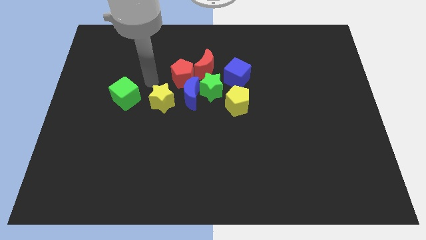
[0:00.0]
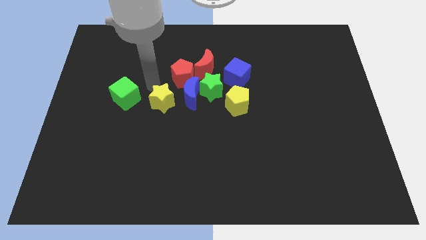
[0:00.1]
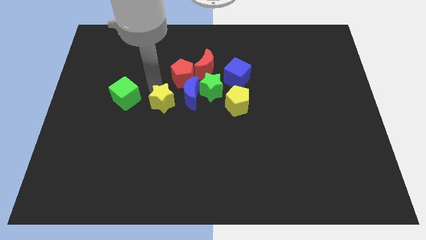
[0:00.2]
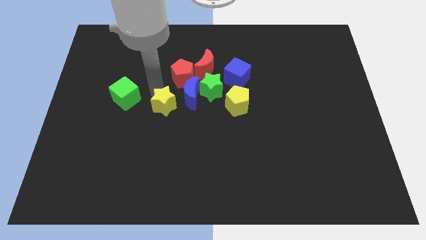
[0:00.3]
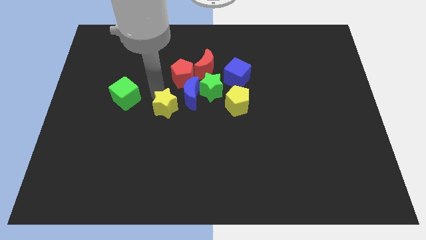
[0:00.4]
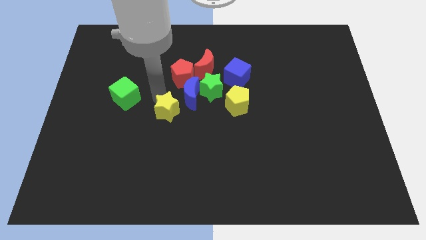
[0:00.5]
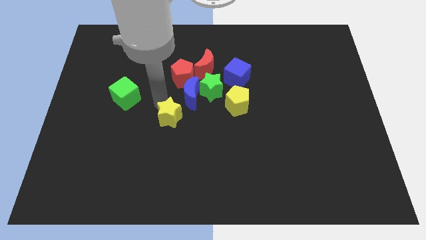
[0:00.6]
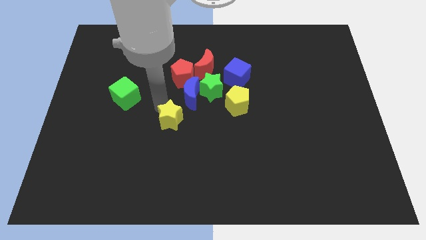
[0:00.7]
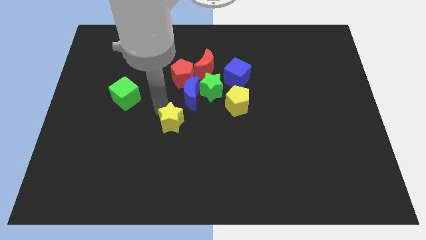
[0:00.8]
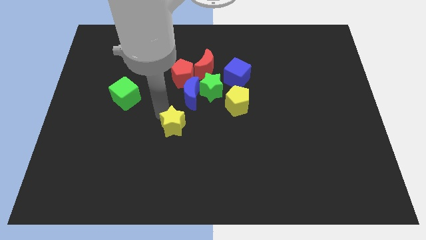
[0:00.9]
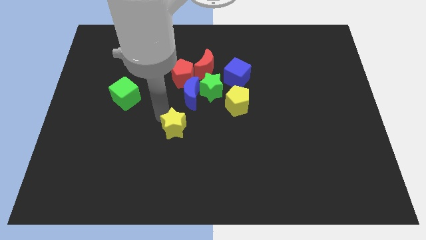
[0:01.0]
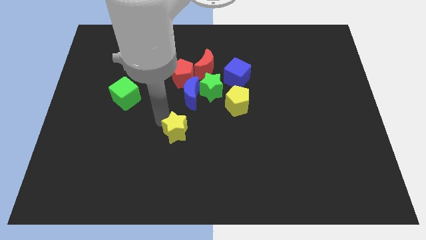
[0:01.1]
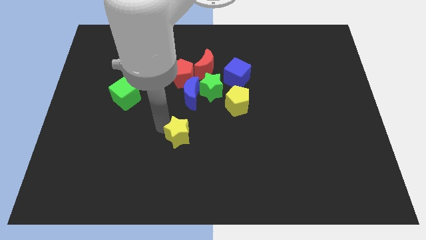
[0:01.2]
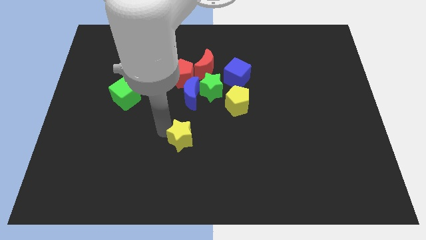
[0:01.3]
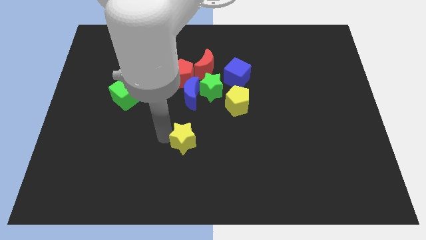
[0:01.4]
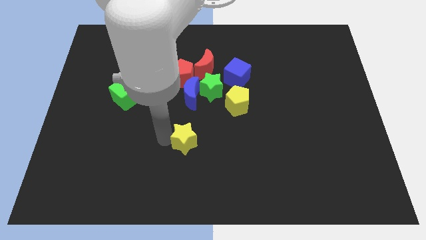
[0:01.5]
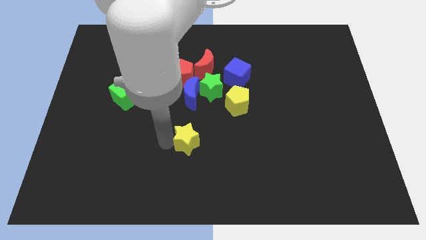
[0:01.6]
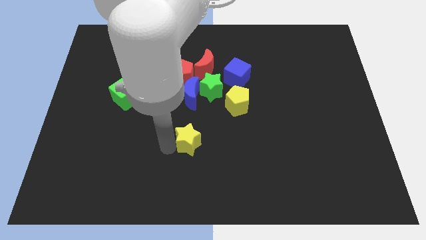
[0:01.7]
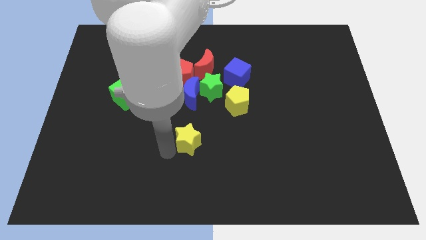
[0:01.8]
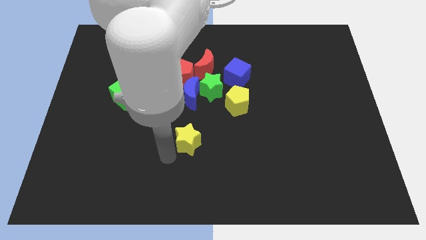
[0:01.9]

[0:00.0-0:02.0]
put the yellow star vertically below the blue crescent

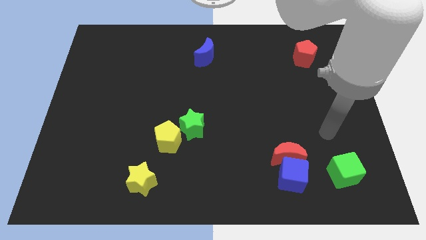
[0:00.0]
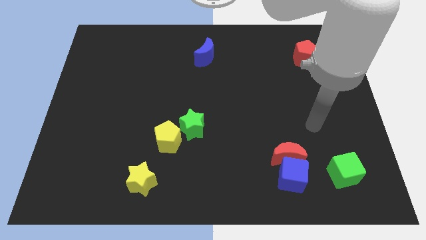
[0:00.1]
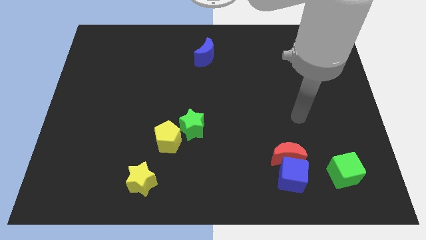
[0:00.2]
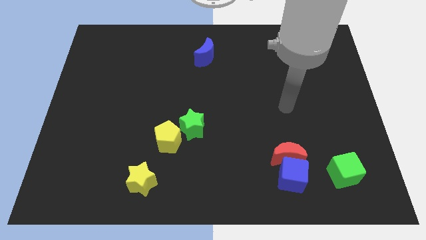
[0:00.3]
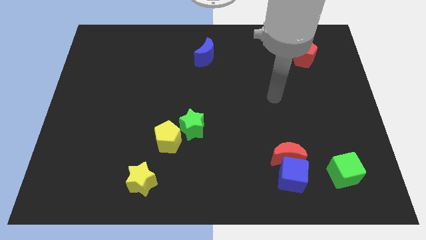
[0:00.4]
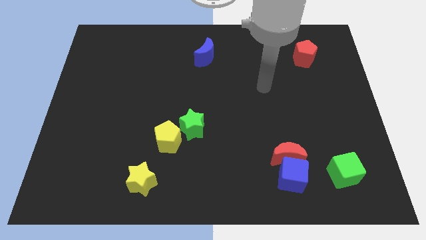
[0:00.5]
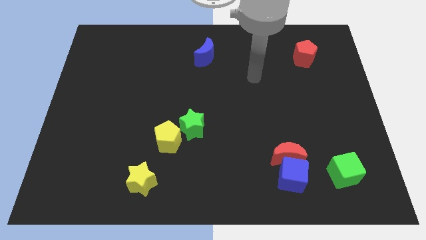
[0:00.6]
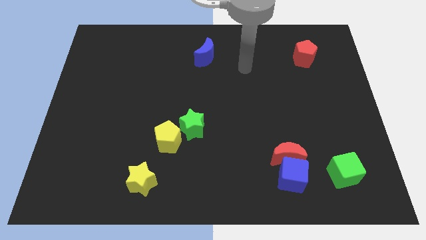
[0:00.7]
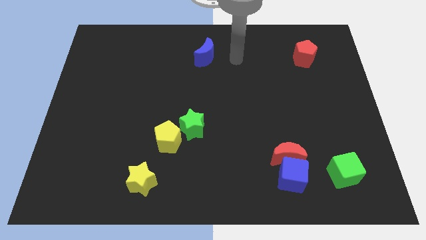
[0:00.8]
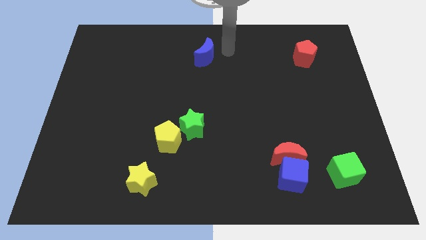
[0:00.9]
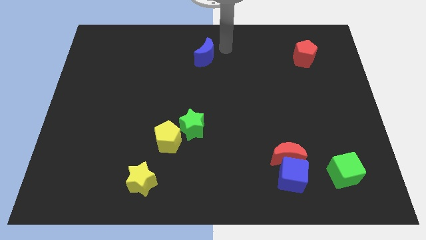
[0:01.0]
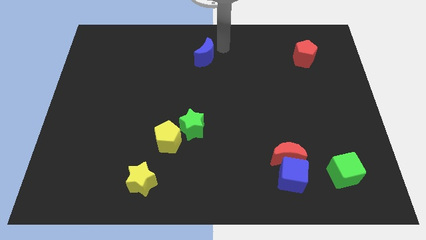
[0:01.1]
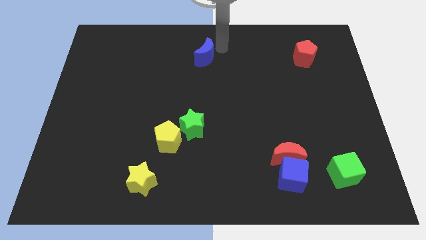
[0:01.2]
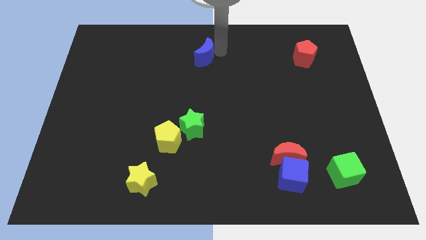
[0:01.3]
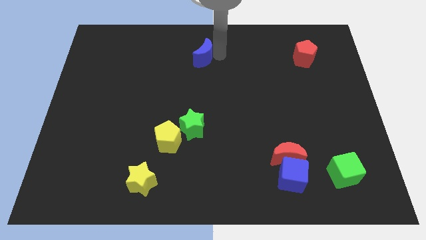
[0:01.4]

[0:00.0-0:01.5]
touch the blue moon

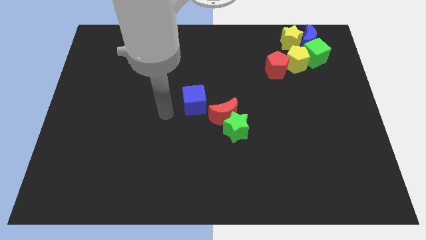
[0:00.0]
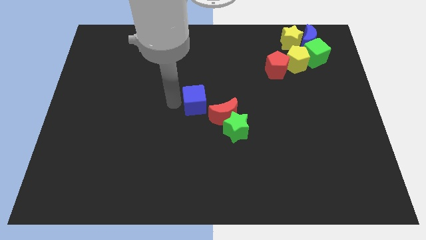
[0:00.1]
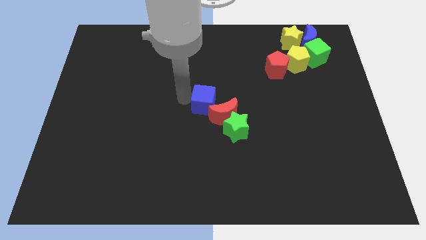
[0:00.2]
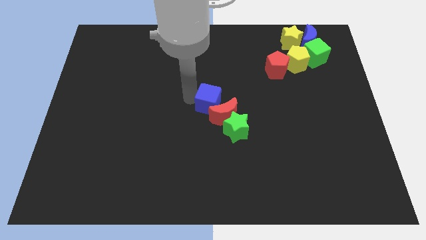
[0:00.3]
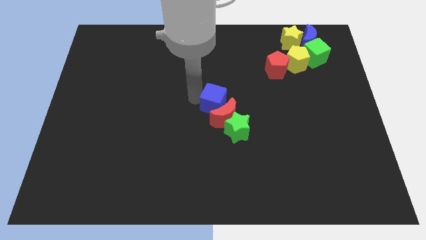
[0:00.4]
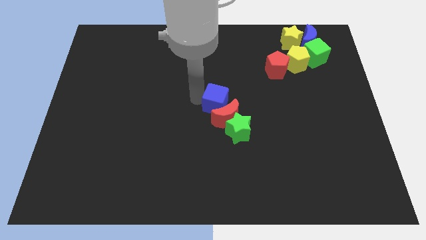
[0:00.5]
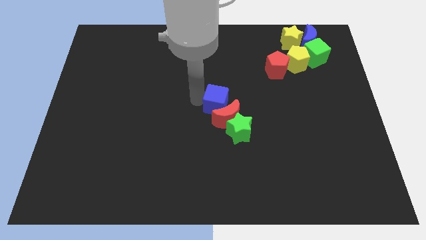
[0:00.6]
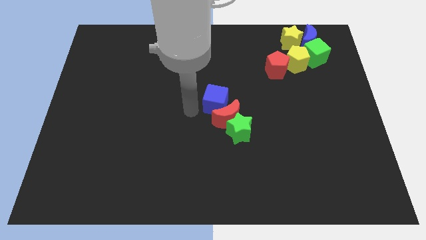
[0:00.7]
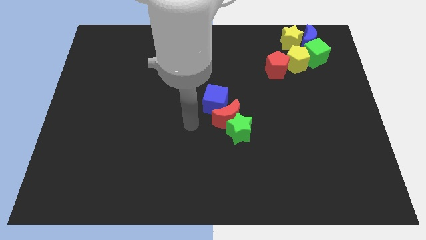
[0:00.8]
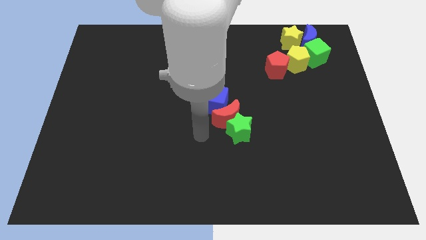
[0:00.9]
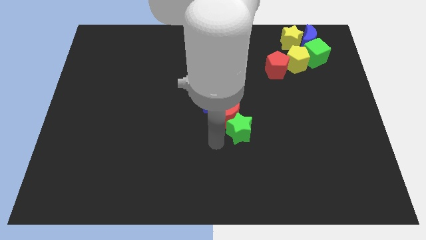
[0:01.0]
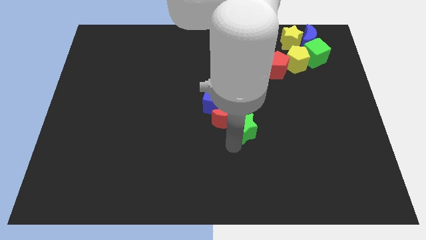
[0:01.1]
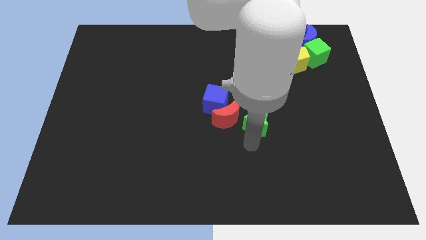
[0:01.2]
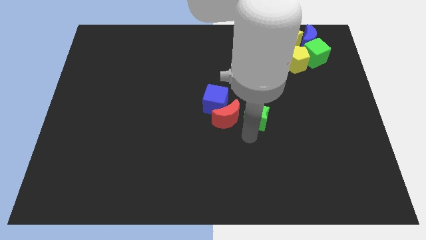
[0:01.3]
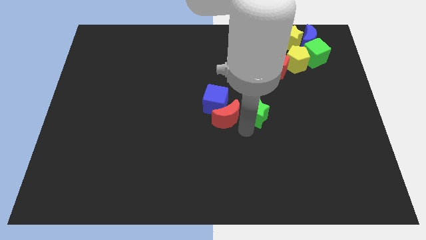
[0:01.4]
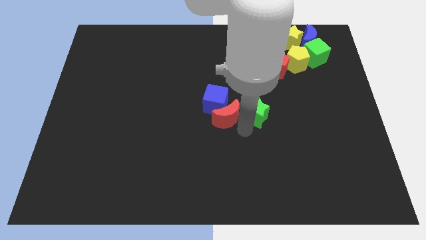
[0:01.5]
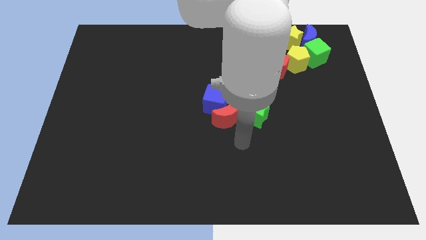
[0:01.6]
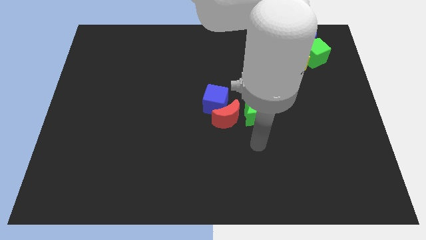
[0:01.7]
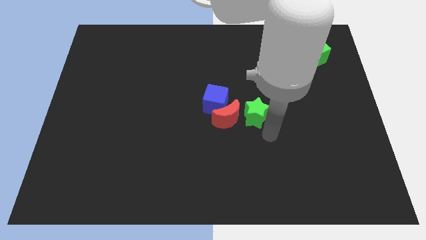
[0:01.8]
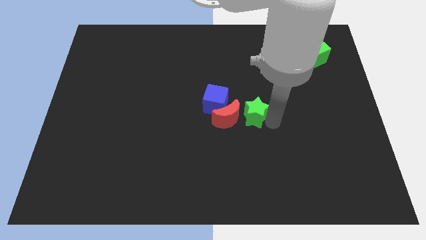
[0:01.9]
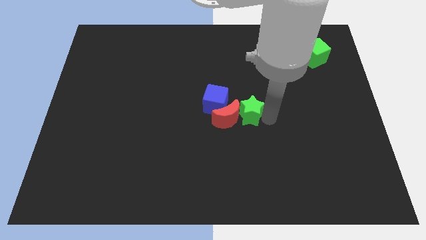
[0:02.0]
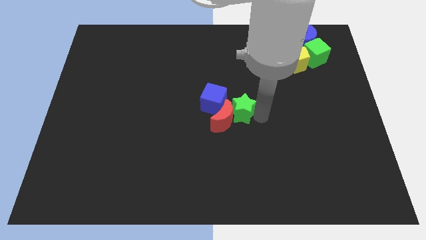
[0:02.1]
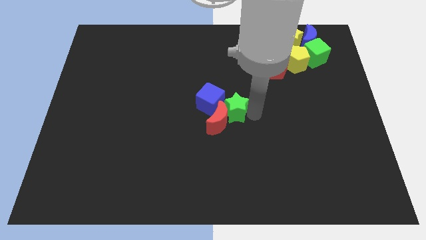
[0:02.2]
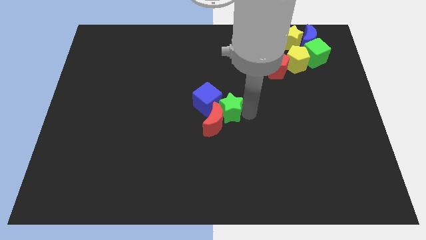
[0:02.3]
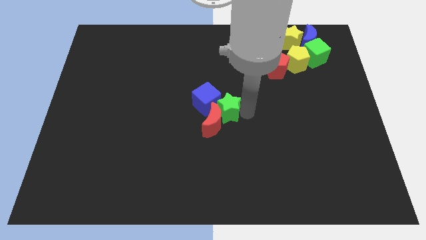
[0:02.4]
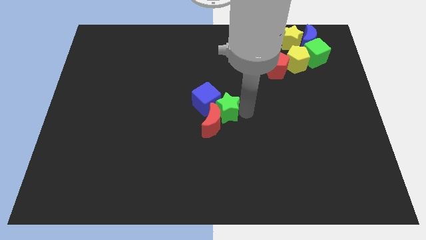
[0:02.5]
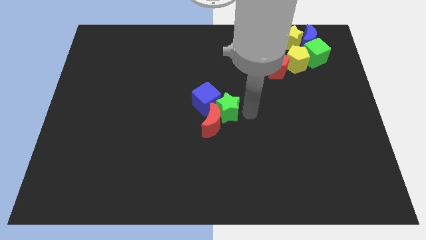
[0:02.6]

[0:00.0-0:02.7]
push the green star into the blue cube and red crescent

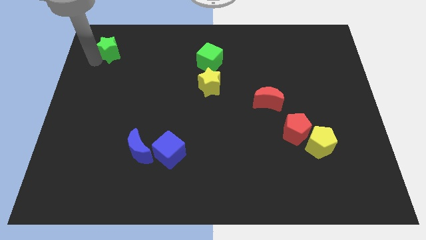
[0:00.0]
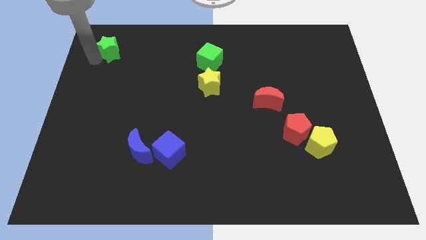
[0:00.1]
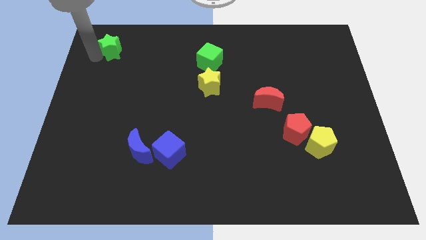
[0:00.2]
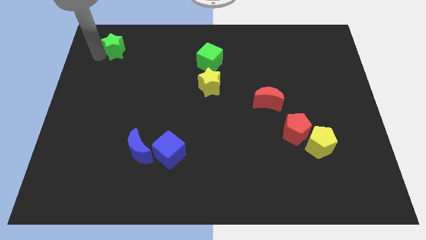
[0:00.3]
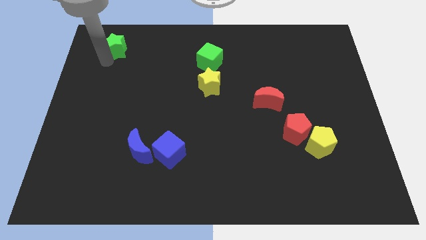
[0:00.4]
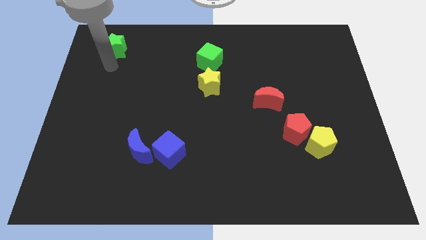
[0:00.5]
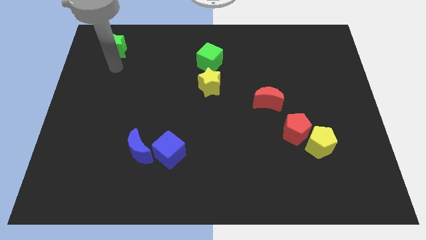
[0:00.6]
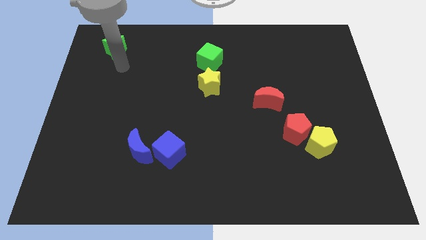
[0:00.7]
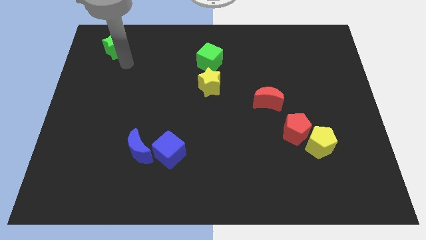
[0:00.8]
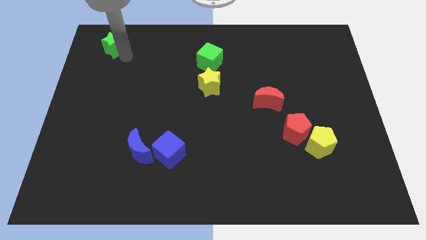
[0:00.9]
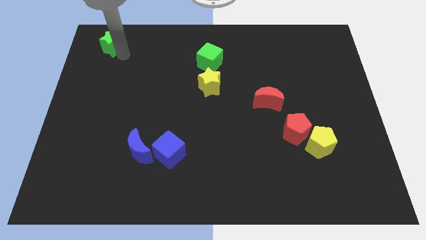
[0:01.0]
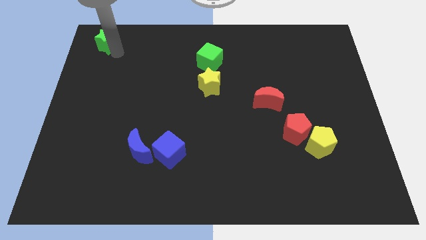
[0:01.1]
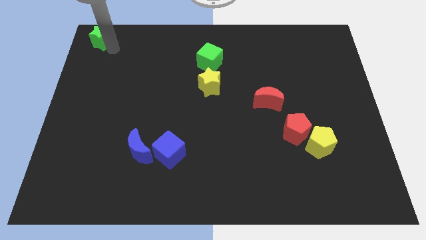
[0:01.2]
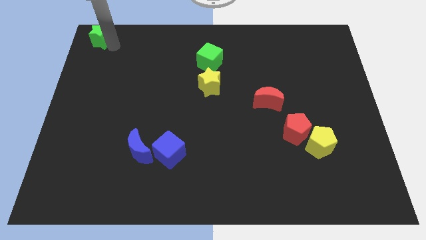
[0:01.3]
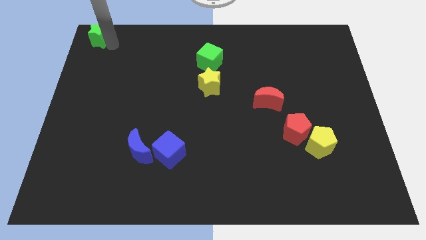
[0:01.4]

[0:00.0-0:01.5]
place green star to the top left corner of the board

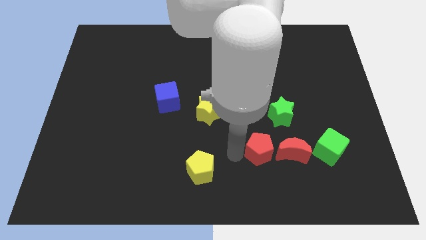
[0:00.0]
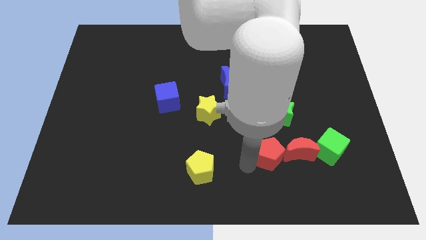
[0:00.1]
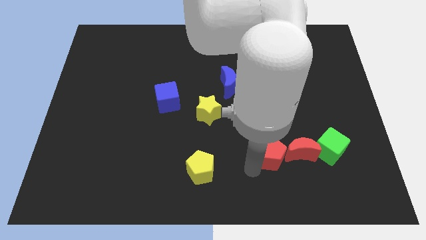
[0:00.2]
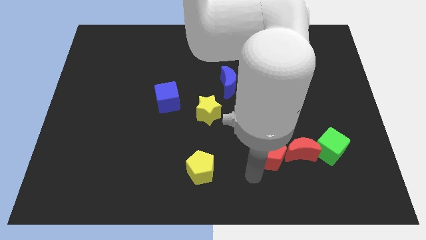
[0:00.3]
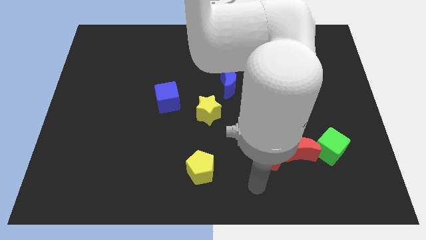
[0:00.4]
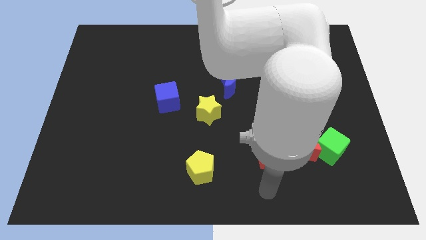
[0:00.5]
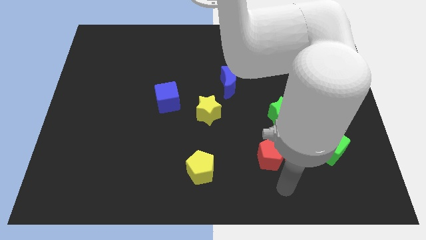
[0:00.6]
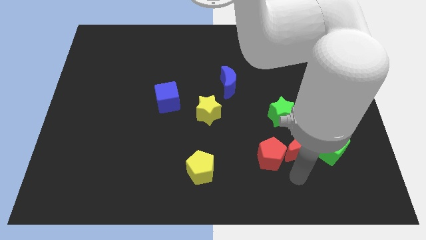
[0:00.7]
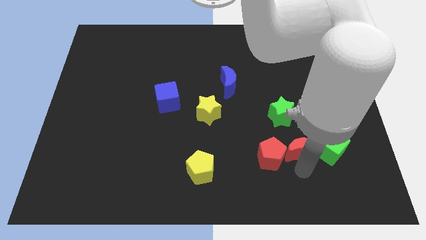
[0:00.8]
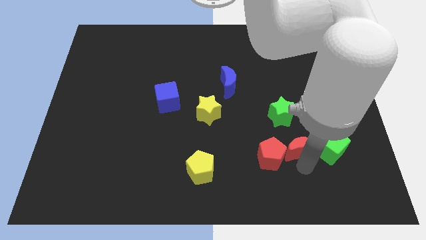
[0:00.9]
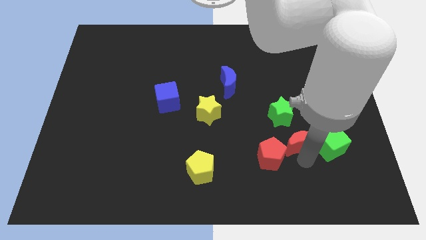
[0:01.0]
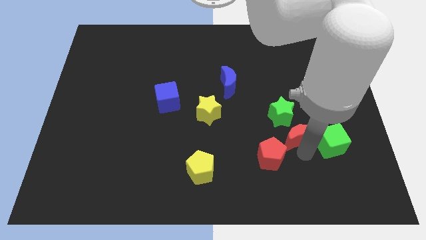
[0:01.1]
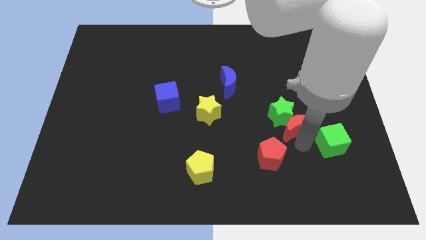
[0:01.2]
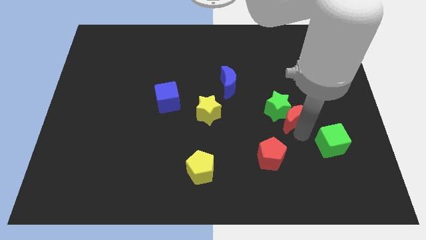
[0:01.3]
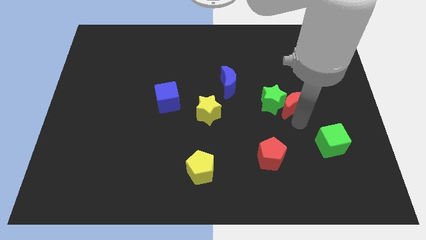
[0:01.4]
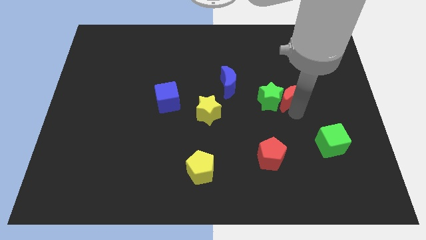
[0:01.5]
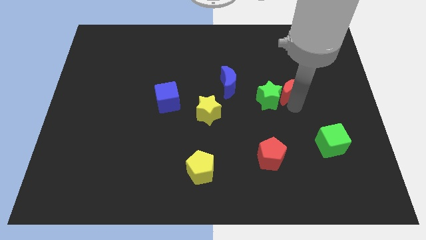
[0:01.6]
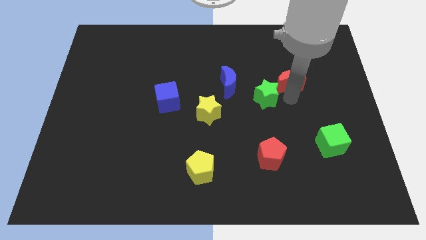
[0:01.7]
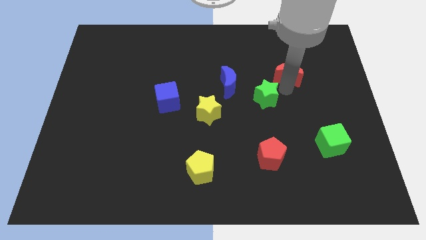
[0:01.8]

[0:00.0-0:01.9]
push green star with red moon
